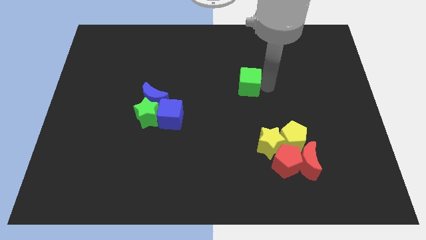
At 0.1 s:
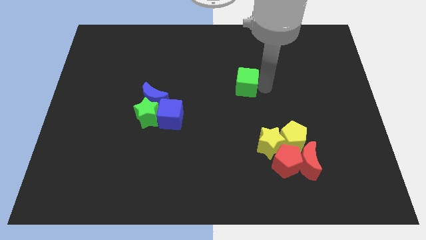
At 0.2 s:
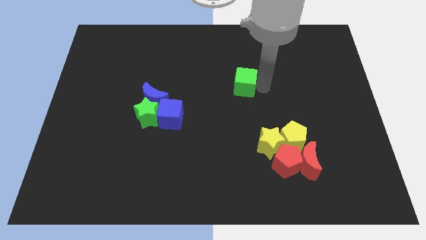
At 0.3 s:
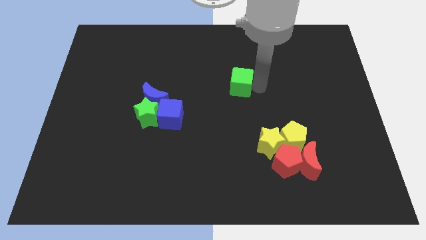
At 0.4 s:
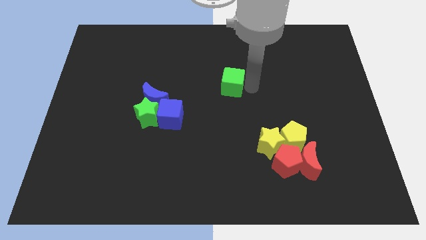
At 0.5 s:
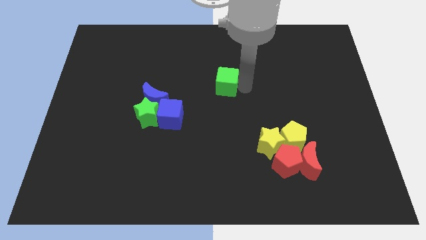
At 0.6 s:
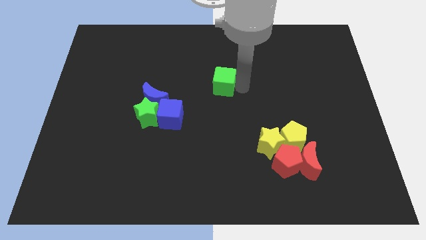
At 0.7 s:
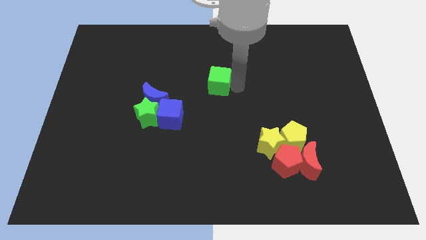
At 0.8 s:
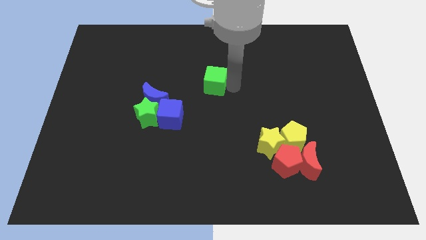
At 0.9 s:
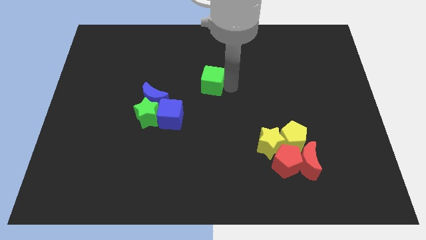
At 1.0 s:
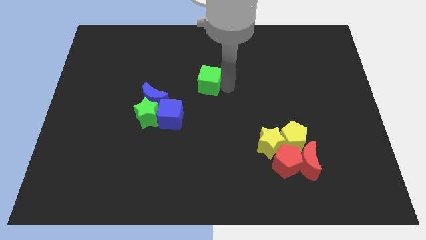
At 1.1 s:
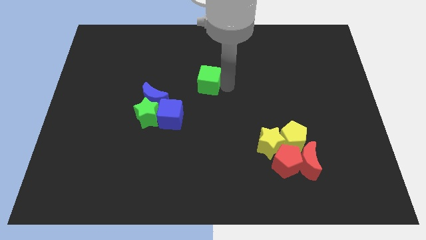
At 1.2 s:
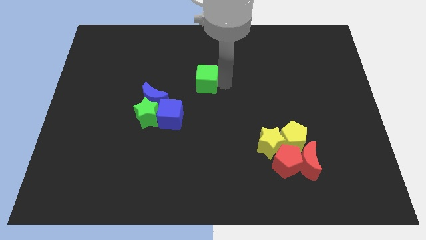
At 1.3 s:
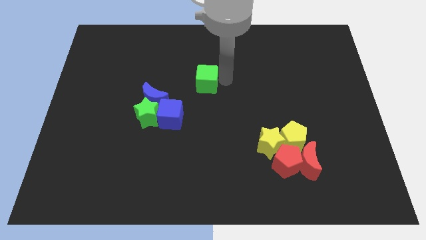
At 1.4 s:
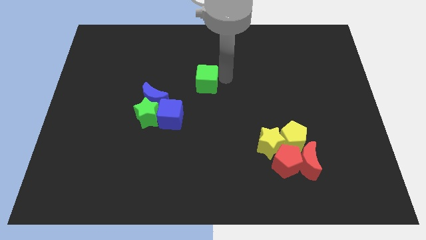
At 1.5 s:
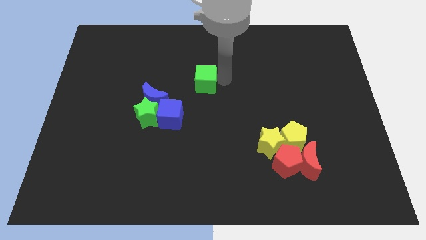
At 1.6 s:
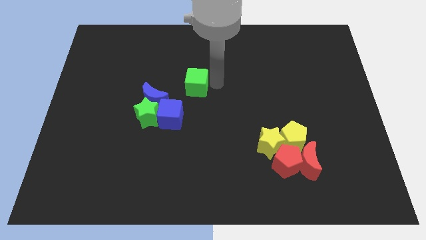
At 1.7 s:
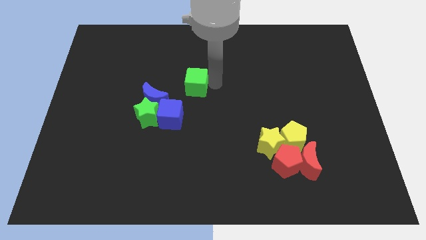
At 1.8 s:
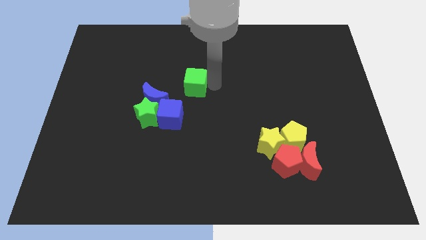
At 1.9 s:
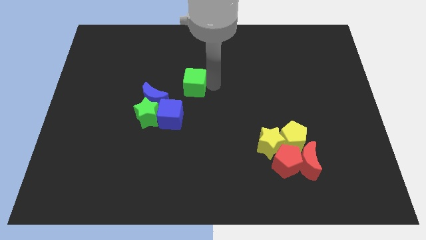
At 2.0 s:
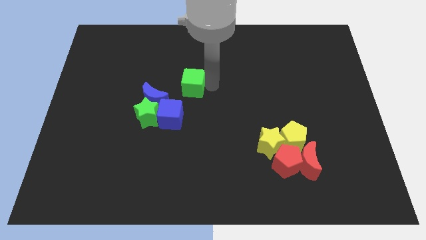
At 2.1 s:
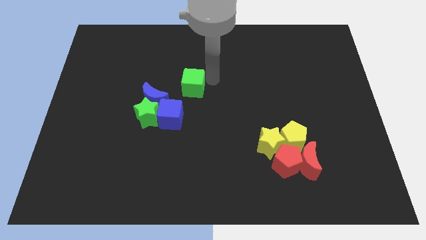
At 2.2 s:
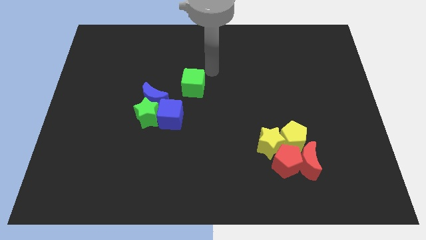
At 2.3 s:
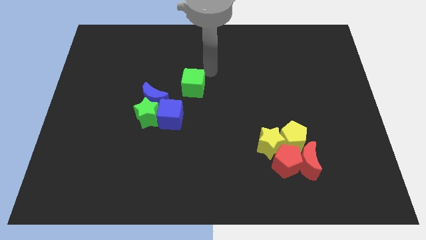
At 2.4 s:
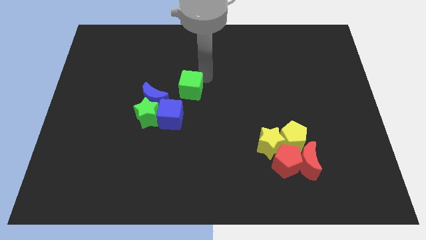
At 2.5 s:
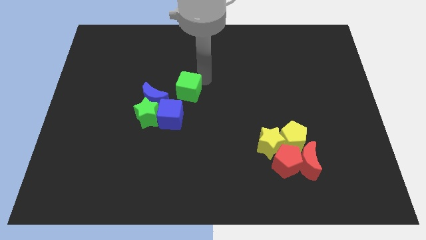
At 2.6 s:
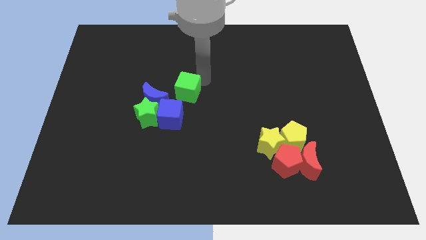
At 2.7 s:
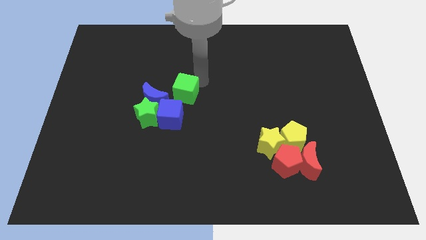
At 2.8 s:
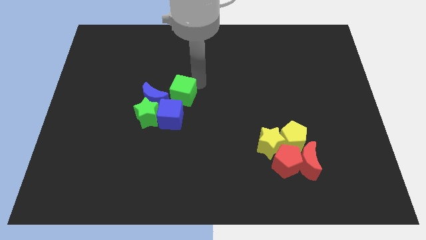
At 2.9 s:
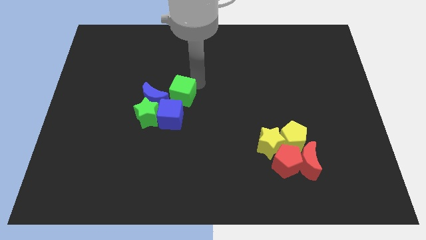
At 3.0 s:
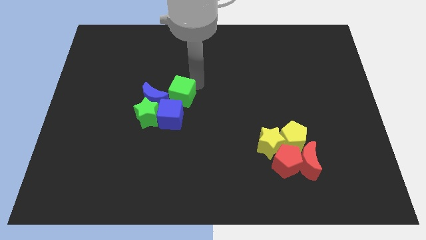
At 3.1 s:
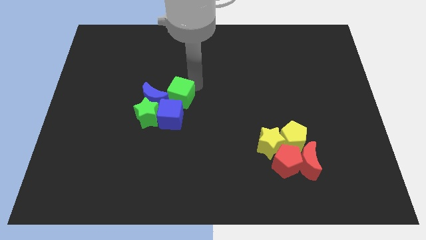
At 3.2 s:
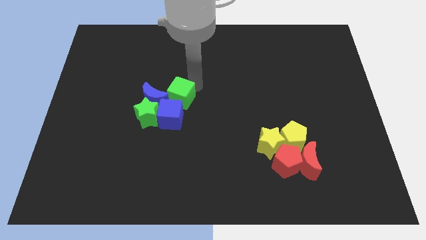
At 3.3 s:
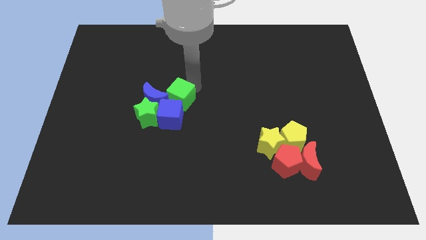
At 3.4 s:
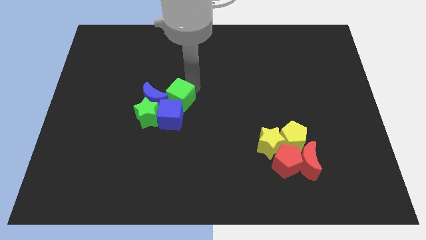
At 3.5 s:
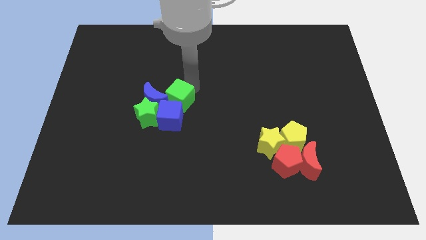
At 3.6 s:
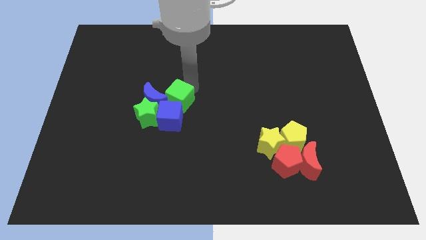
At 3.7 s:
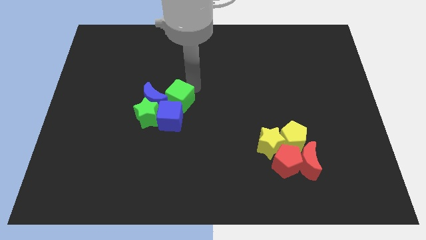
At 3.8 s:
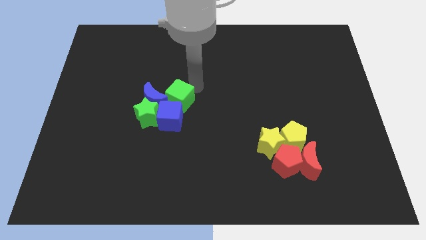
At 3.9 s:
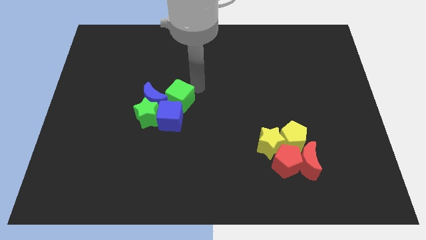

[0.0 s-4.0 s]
push the green cube to the top of the blue cube

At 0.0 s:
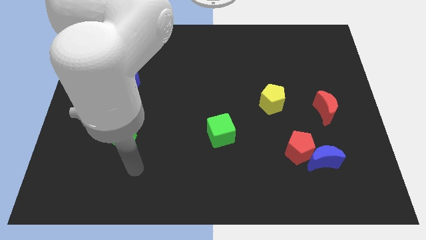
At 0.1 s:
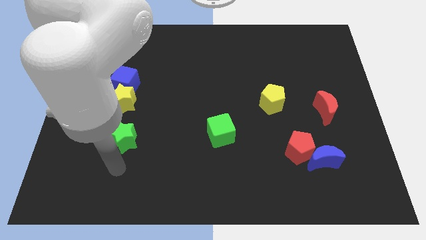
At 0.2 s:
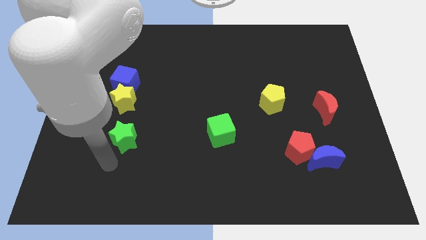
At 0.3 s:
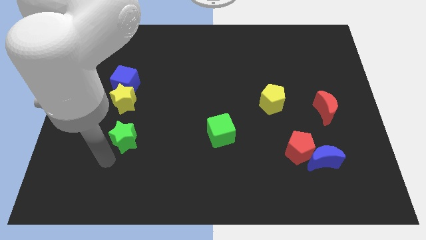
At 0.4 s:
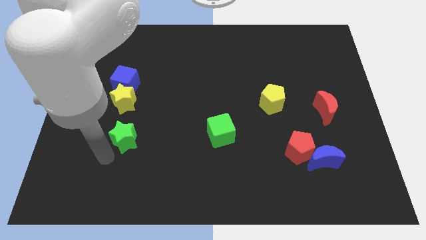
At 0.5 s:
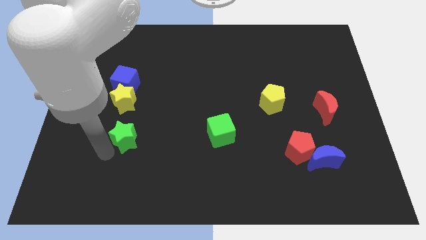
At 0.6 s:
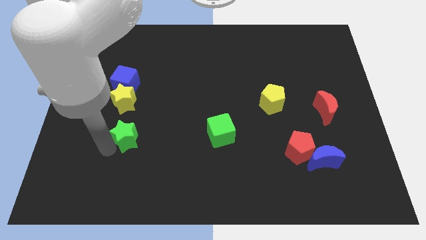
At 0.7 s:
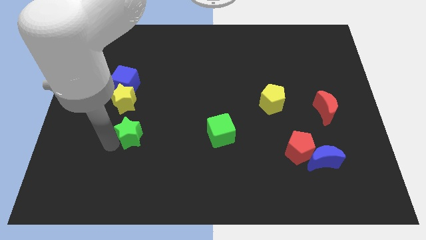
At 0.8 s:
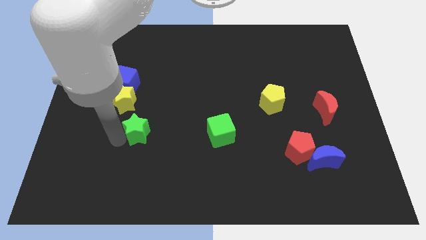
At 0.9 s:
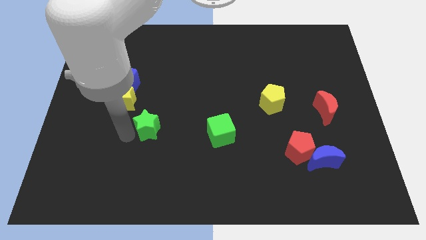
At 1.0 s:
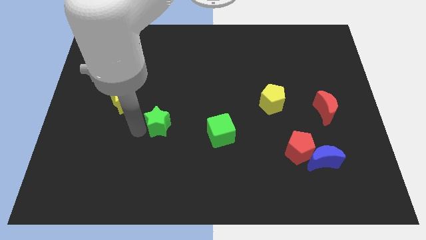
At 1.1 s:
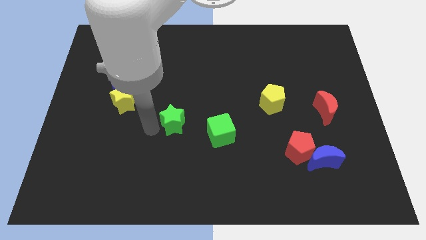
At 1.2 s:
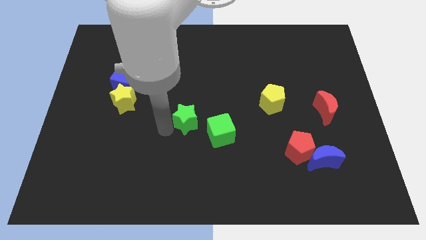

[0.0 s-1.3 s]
move green star to the left of green cube

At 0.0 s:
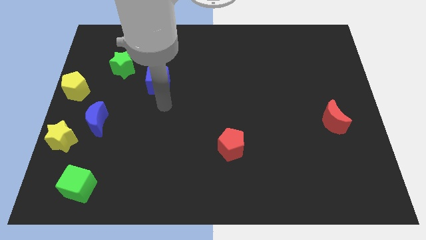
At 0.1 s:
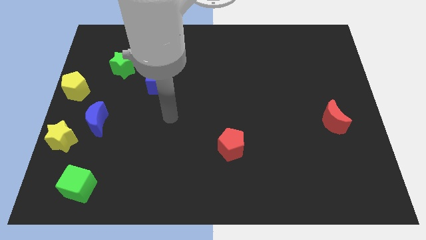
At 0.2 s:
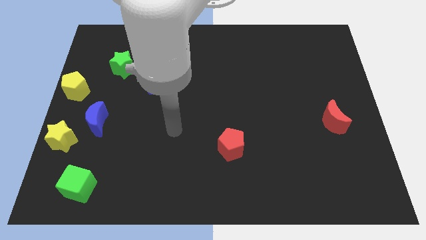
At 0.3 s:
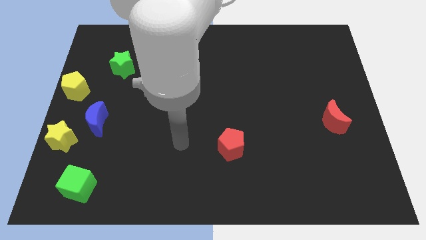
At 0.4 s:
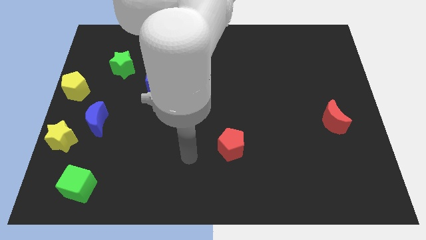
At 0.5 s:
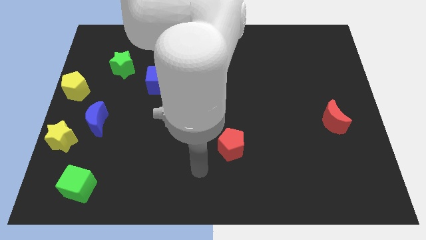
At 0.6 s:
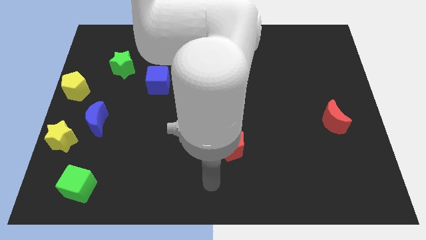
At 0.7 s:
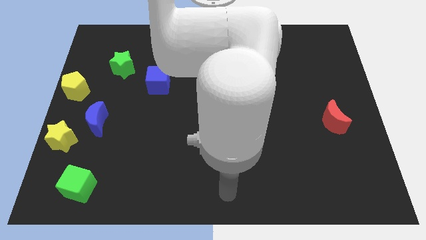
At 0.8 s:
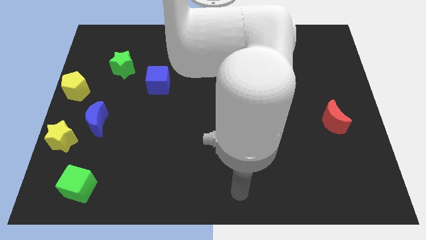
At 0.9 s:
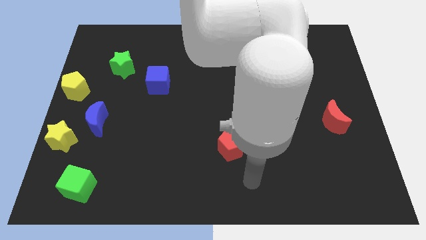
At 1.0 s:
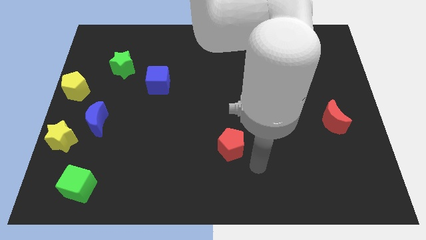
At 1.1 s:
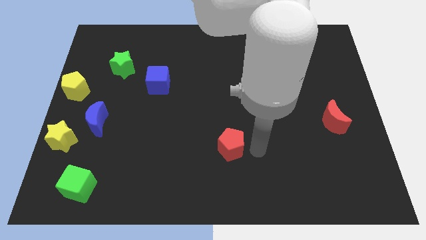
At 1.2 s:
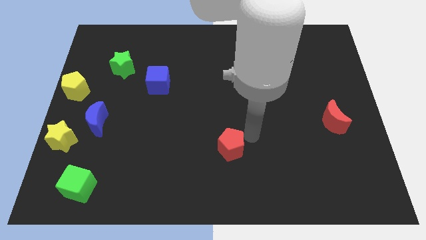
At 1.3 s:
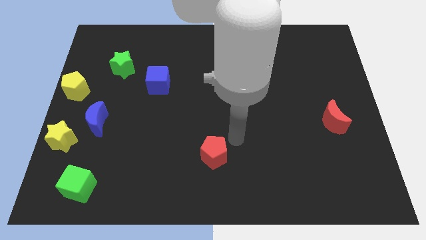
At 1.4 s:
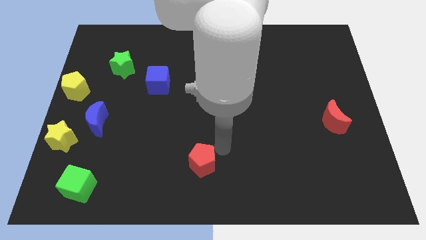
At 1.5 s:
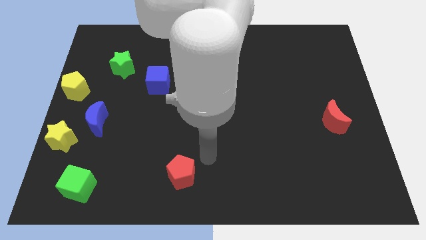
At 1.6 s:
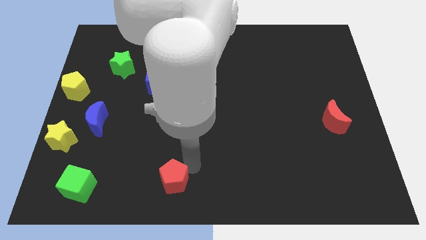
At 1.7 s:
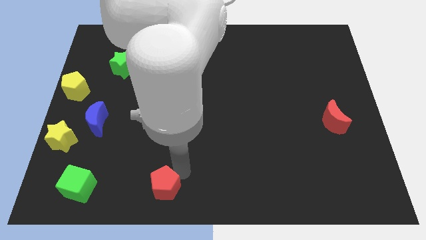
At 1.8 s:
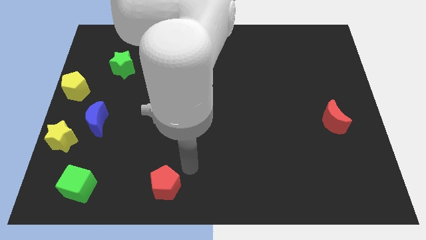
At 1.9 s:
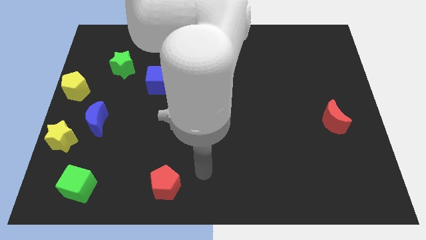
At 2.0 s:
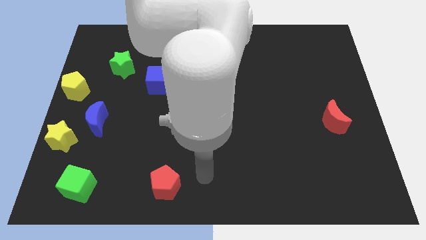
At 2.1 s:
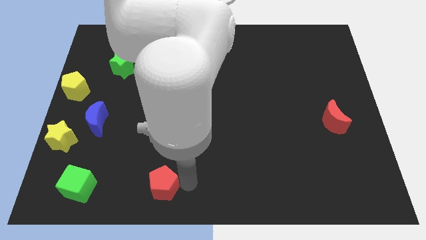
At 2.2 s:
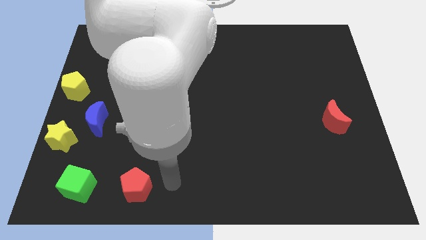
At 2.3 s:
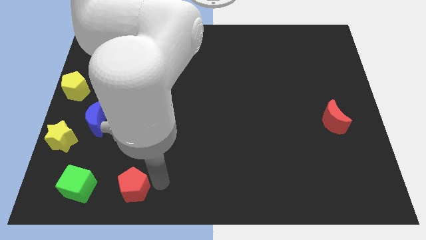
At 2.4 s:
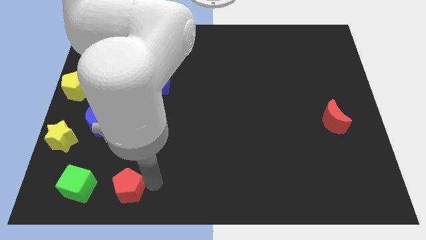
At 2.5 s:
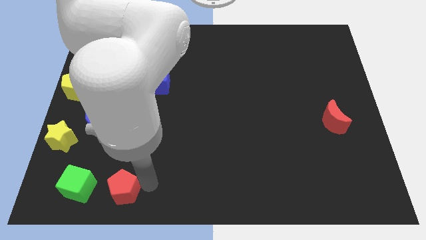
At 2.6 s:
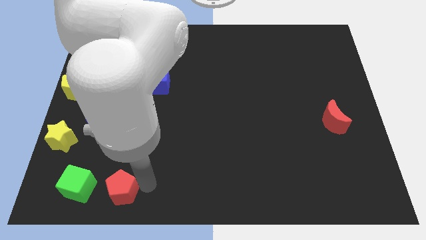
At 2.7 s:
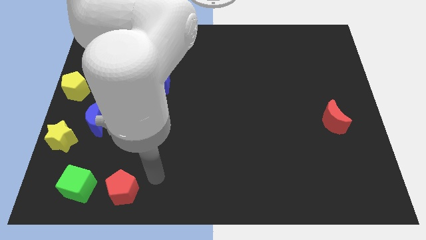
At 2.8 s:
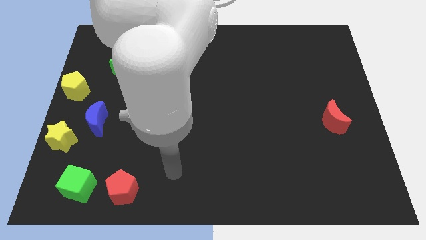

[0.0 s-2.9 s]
push the red pentagon towards the bottom left of the board

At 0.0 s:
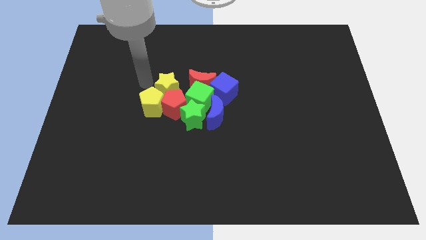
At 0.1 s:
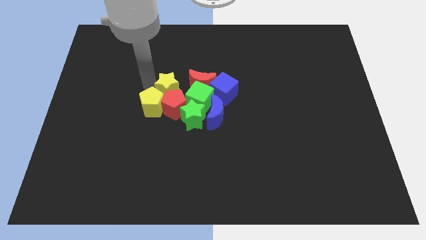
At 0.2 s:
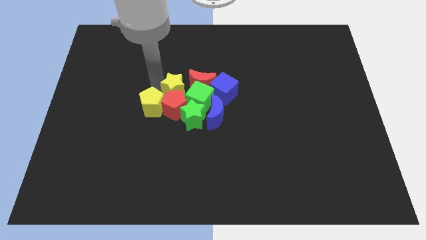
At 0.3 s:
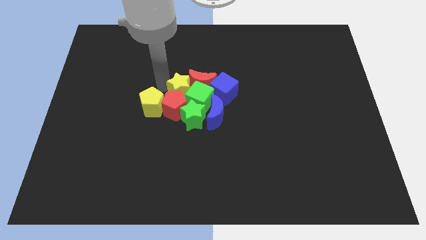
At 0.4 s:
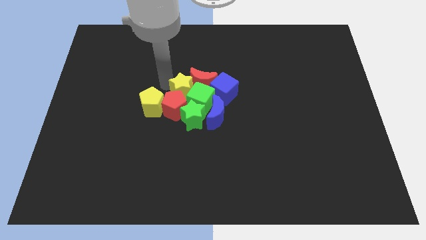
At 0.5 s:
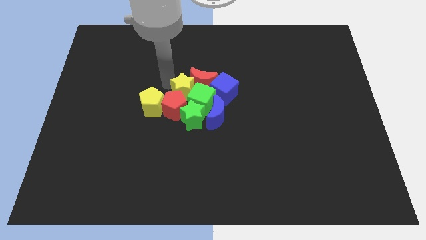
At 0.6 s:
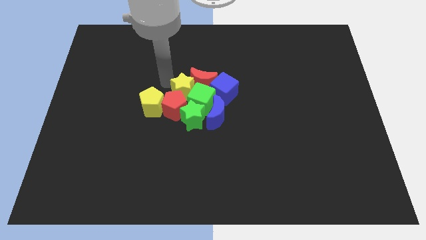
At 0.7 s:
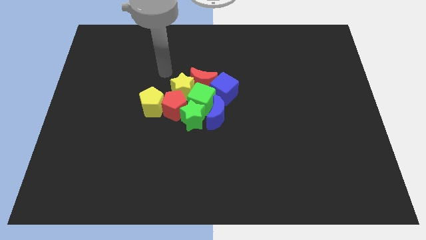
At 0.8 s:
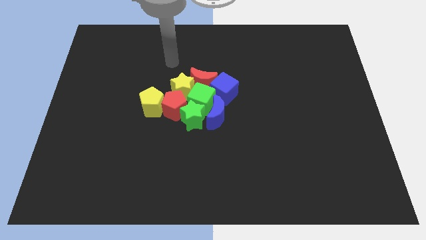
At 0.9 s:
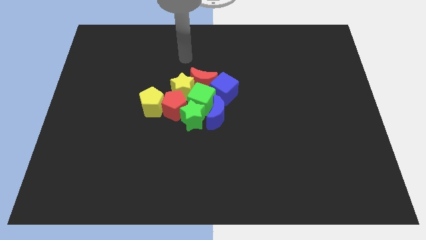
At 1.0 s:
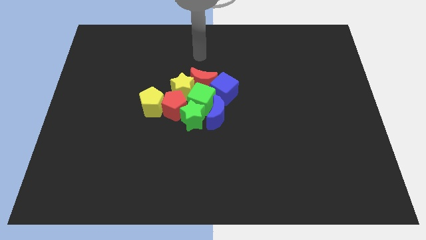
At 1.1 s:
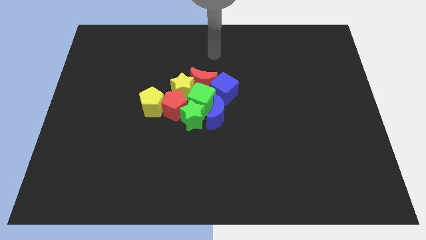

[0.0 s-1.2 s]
push the yellow star into the green cube
